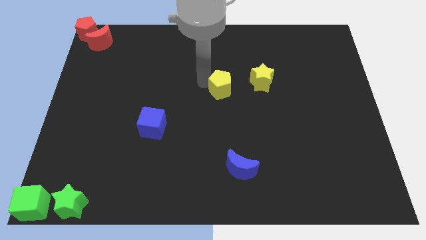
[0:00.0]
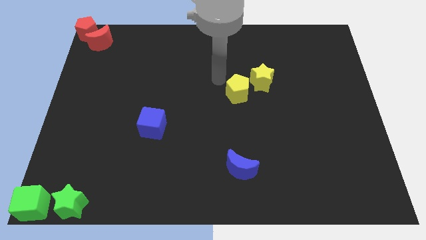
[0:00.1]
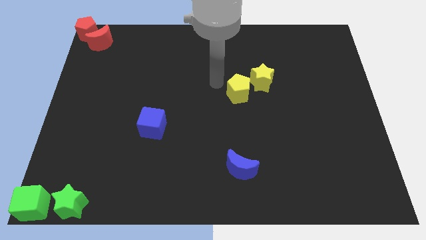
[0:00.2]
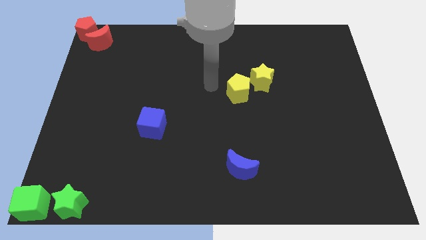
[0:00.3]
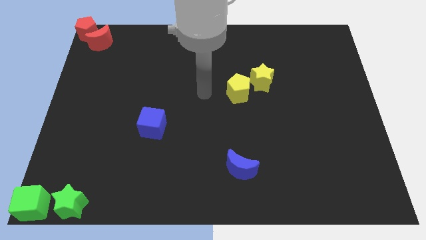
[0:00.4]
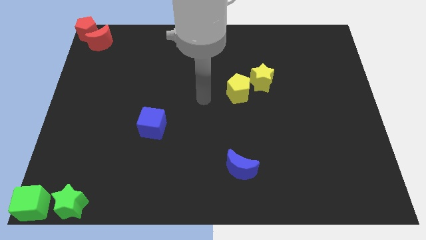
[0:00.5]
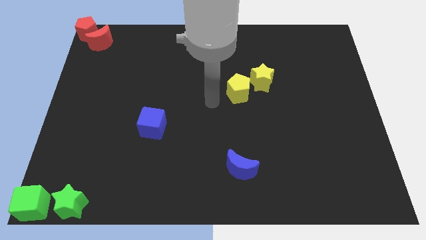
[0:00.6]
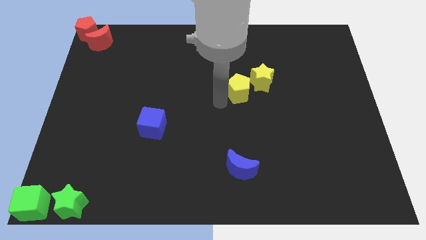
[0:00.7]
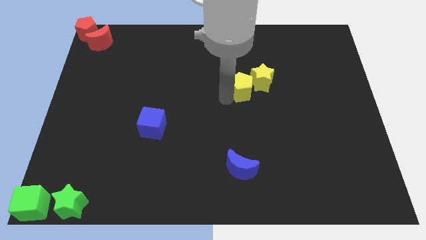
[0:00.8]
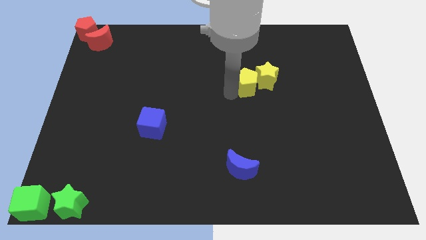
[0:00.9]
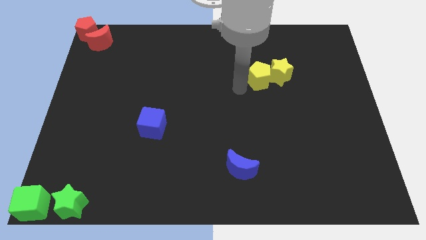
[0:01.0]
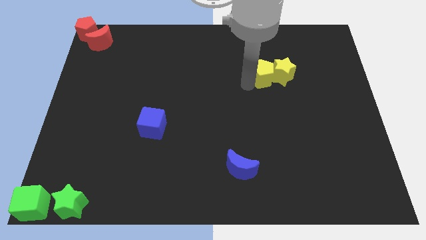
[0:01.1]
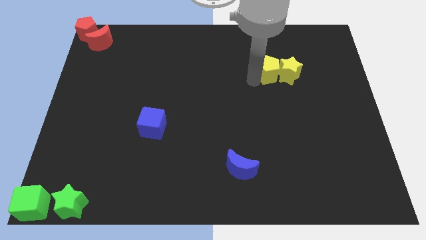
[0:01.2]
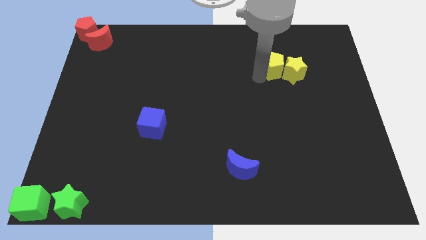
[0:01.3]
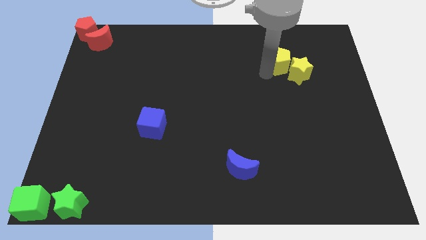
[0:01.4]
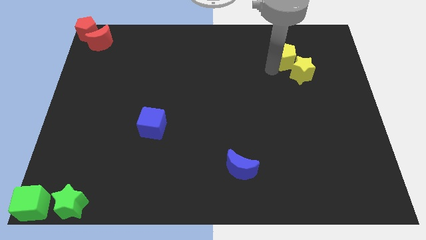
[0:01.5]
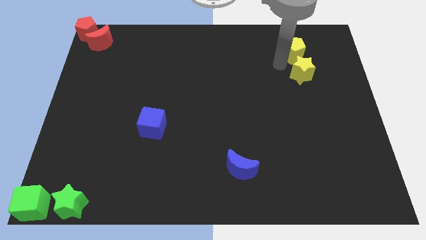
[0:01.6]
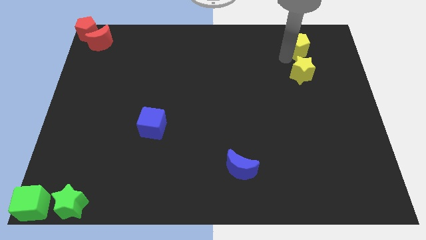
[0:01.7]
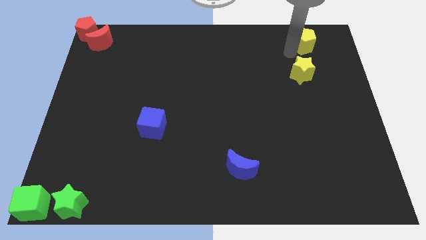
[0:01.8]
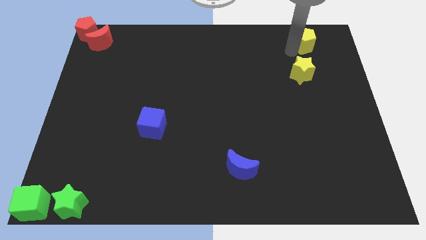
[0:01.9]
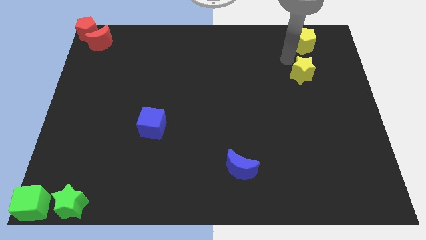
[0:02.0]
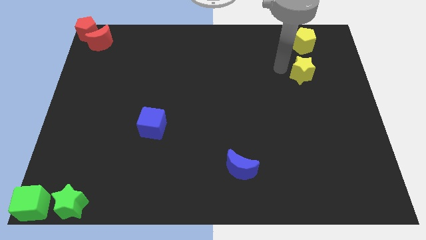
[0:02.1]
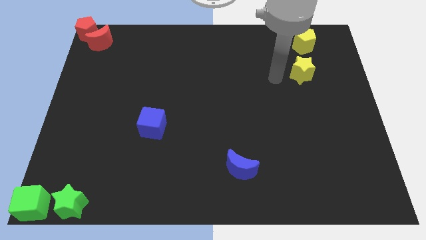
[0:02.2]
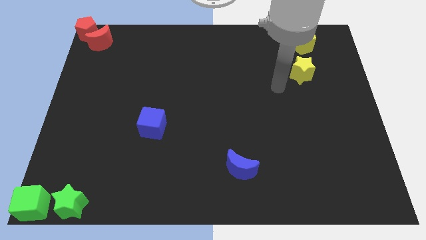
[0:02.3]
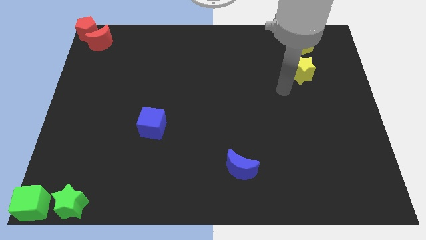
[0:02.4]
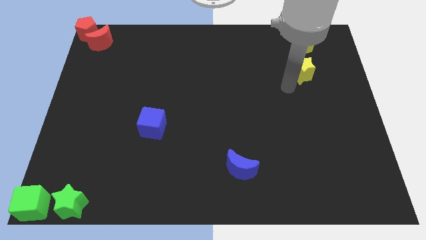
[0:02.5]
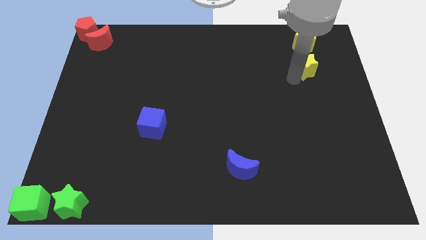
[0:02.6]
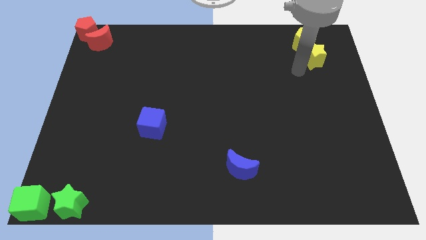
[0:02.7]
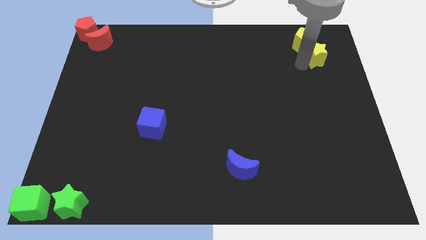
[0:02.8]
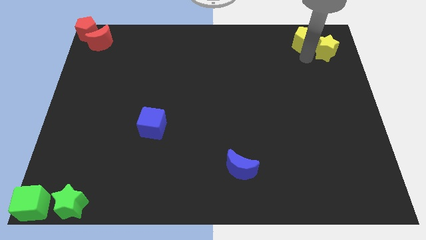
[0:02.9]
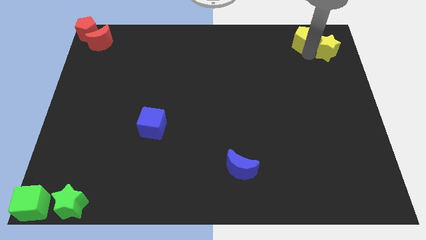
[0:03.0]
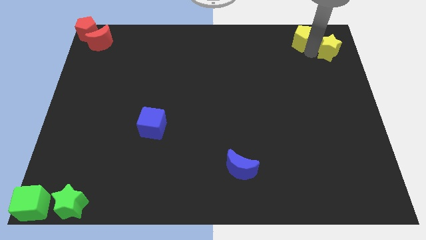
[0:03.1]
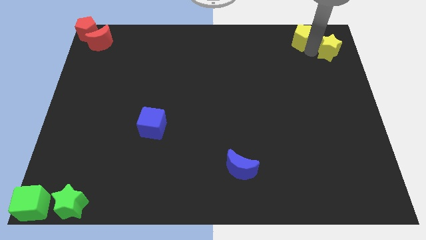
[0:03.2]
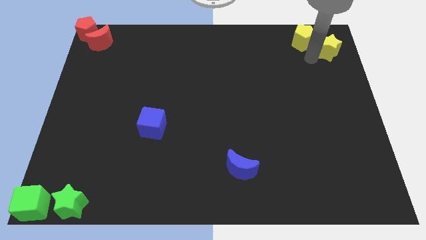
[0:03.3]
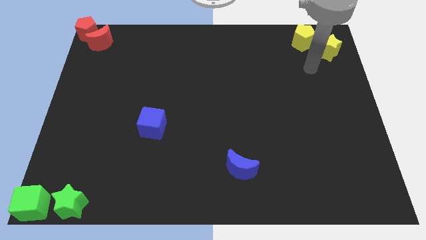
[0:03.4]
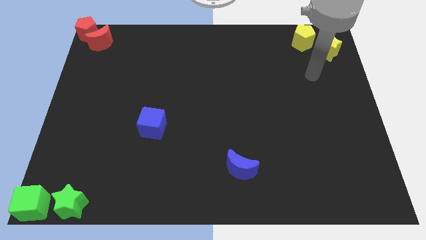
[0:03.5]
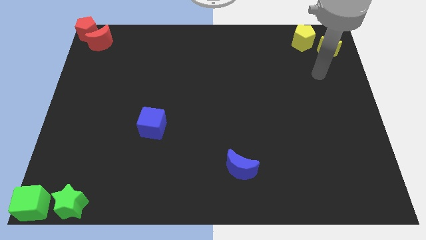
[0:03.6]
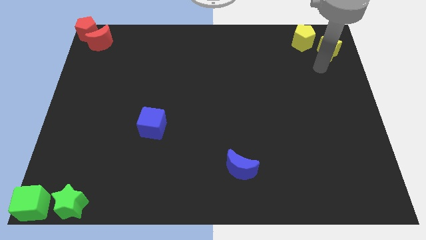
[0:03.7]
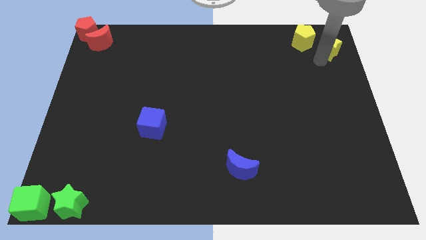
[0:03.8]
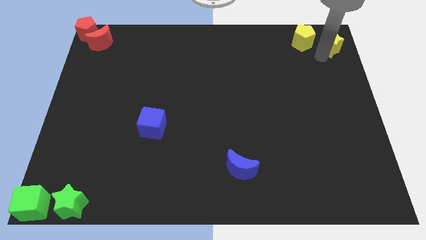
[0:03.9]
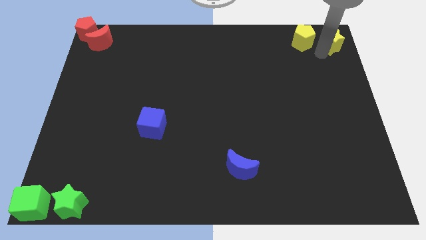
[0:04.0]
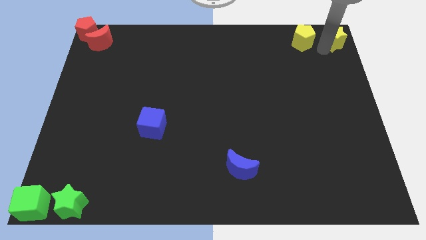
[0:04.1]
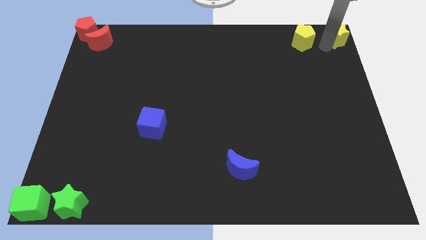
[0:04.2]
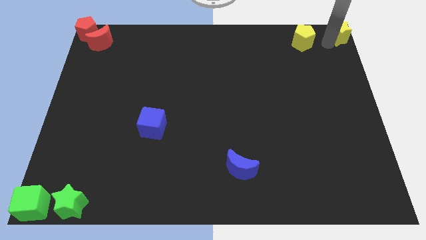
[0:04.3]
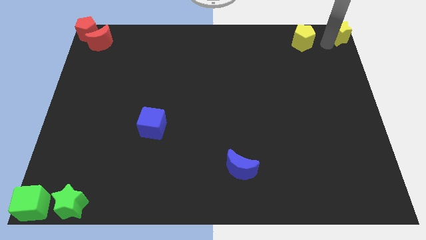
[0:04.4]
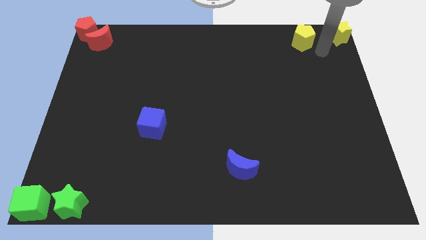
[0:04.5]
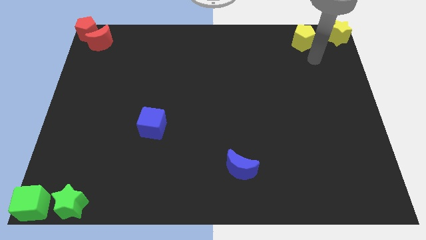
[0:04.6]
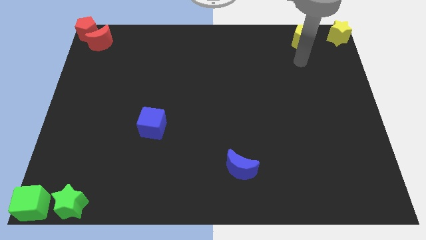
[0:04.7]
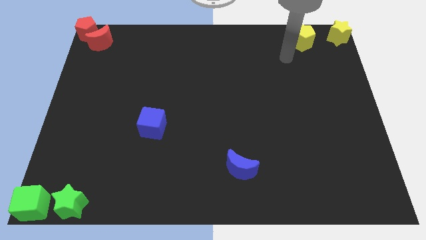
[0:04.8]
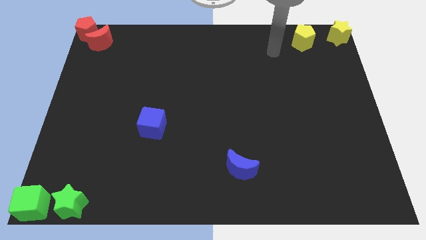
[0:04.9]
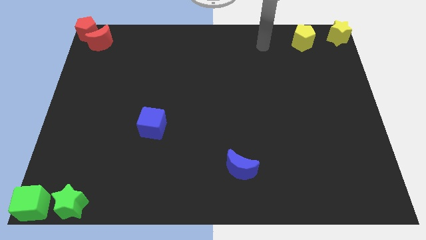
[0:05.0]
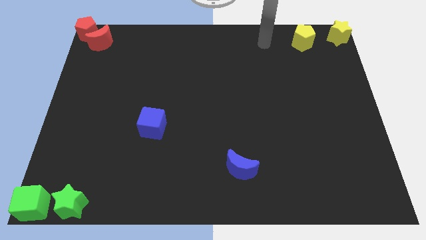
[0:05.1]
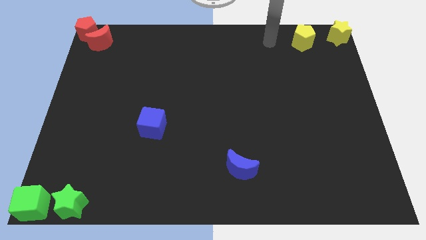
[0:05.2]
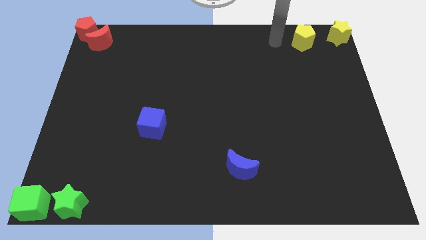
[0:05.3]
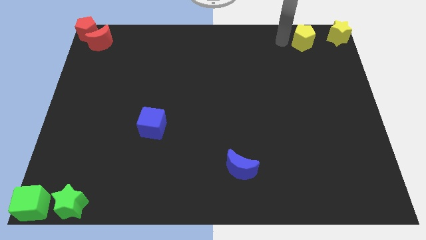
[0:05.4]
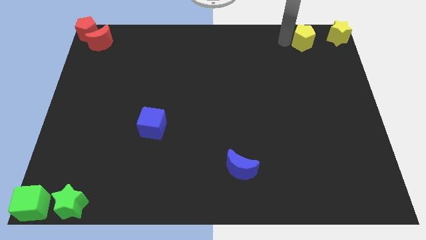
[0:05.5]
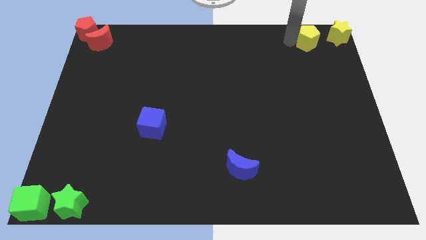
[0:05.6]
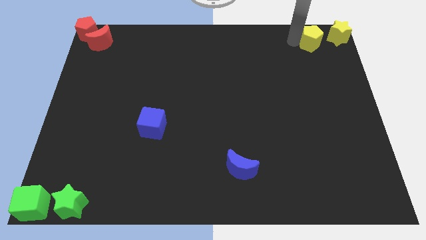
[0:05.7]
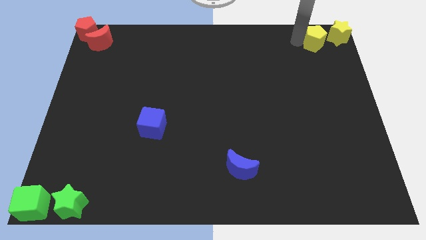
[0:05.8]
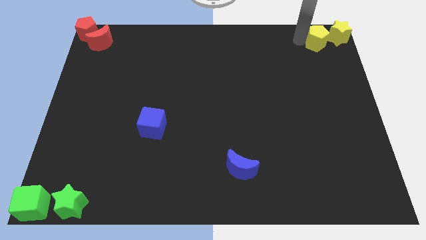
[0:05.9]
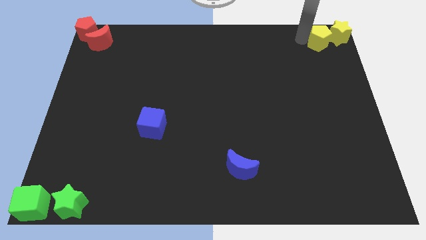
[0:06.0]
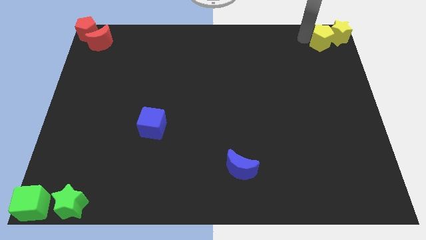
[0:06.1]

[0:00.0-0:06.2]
move the both yellow blocks to the top right side of the board

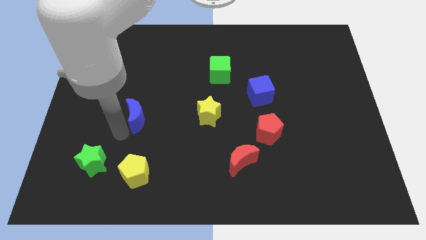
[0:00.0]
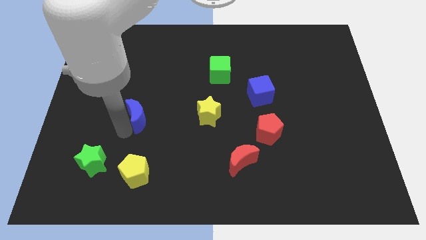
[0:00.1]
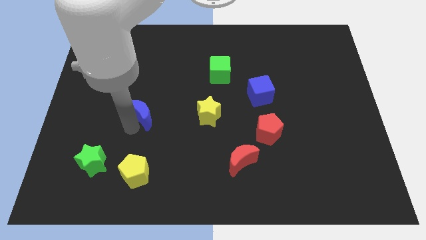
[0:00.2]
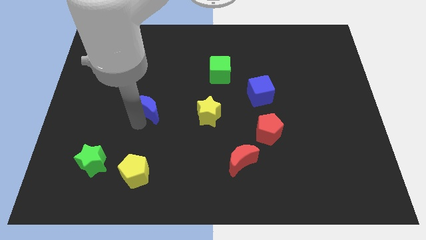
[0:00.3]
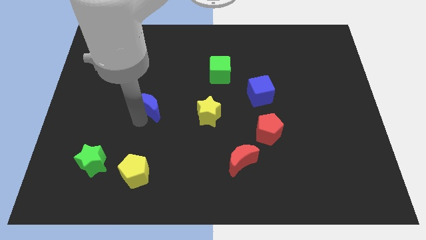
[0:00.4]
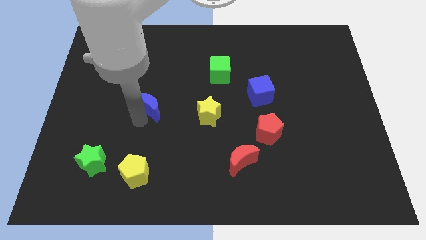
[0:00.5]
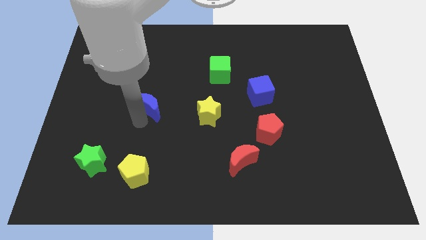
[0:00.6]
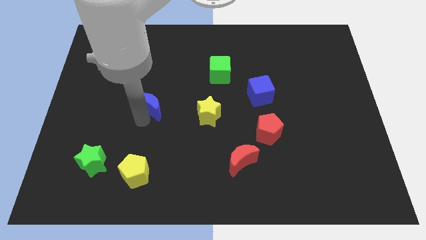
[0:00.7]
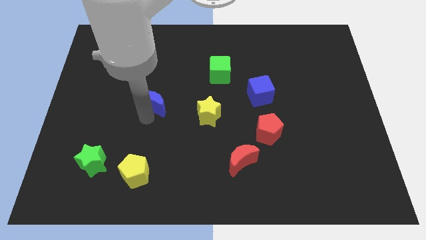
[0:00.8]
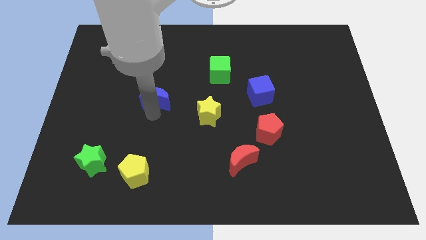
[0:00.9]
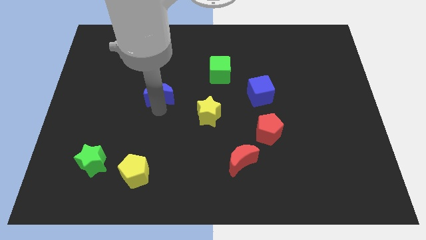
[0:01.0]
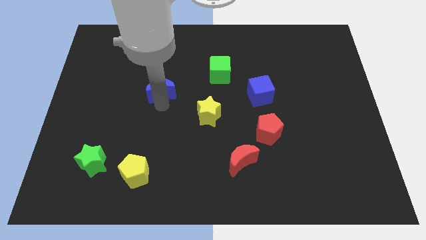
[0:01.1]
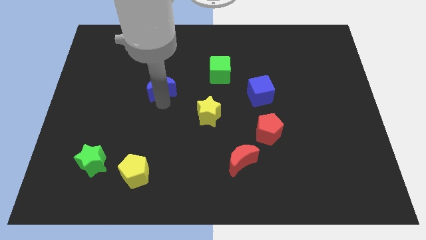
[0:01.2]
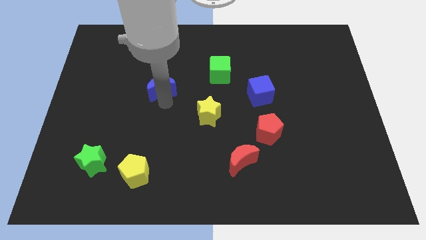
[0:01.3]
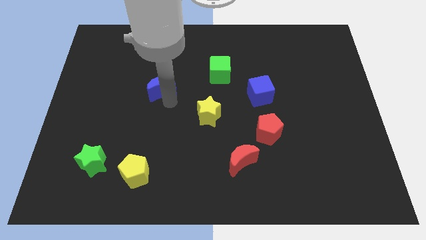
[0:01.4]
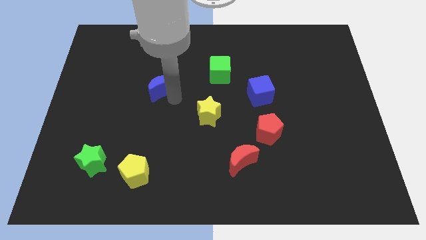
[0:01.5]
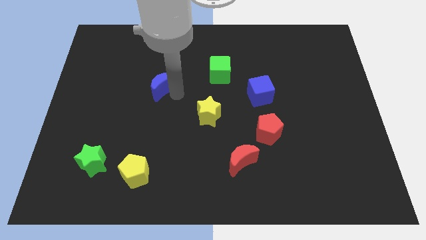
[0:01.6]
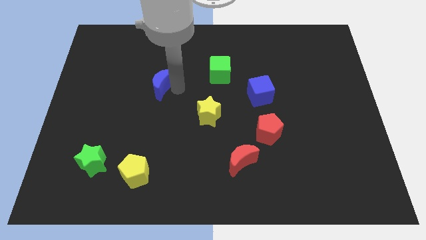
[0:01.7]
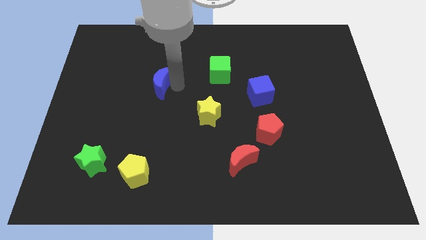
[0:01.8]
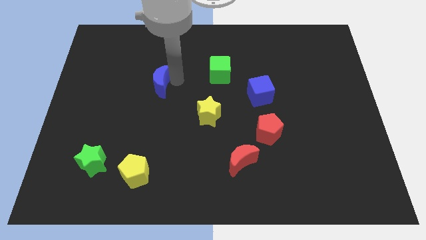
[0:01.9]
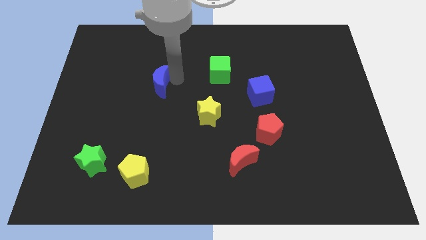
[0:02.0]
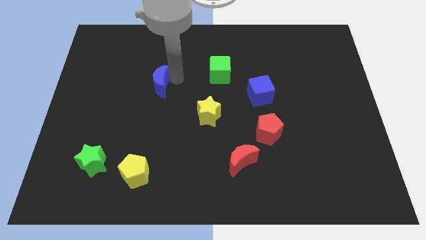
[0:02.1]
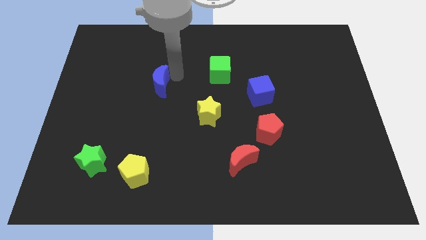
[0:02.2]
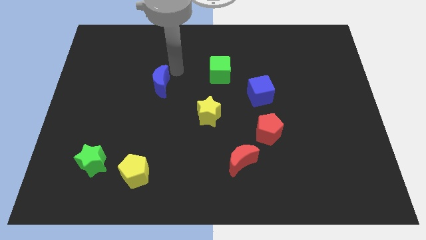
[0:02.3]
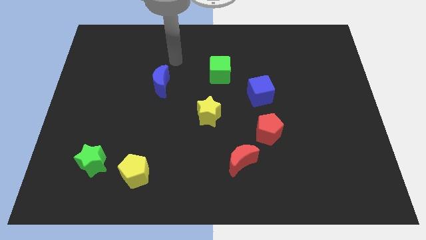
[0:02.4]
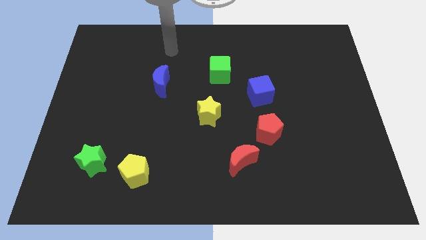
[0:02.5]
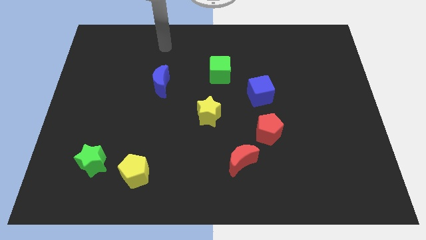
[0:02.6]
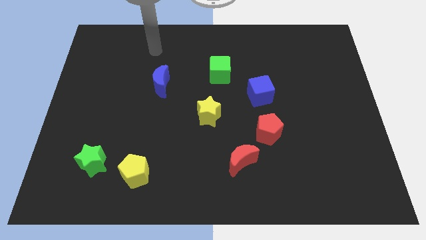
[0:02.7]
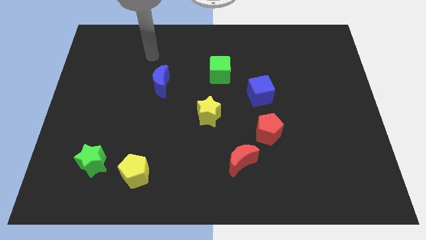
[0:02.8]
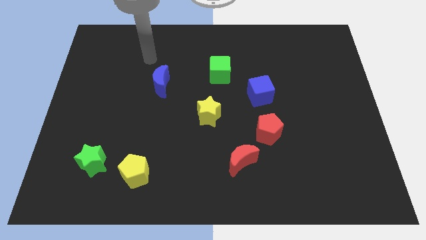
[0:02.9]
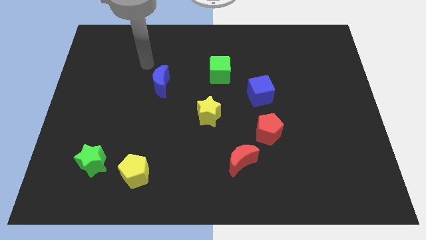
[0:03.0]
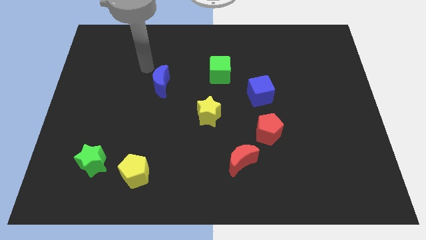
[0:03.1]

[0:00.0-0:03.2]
place blue crescent towards the left of green cube
